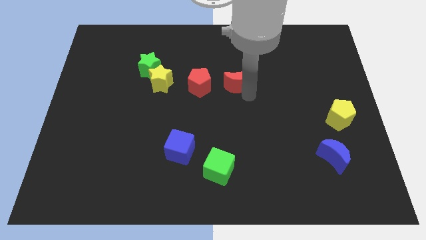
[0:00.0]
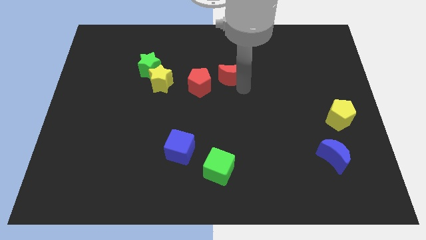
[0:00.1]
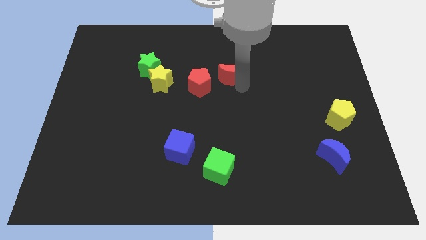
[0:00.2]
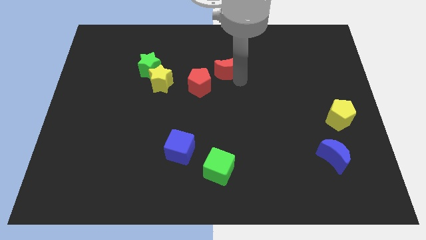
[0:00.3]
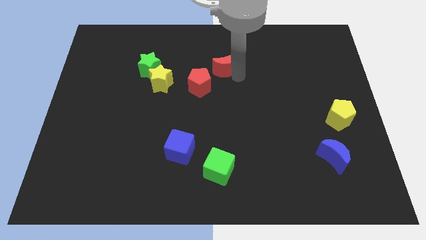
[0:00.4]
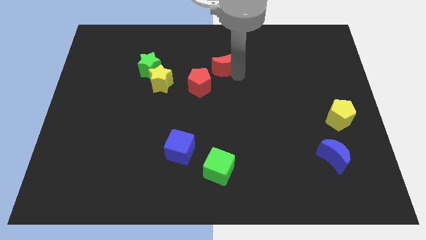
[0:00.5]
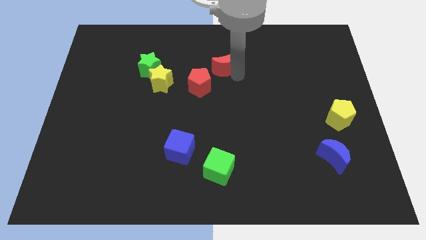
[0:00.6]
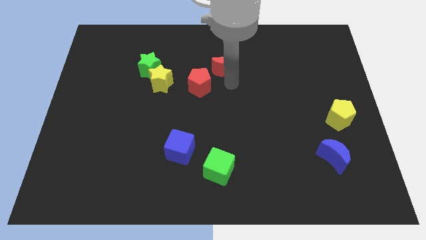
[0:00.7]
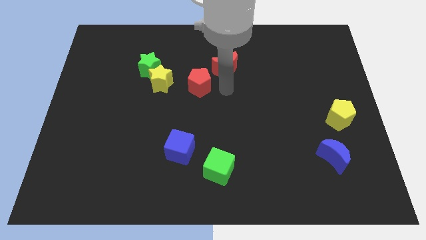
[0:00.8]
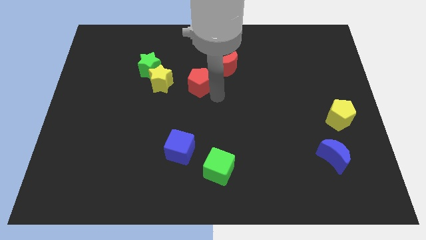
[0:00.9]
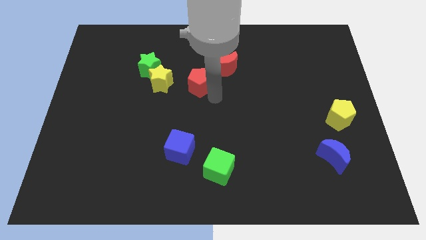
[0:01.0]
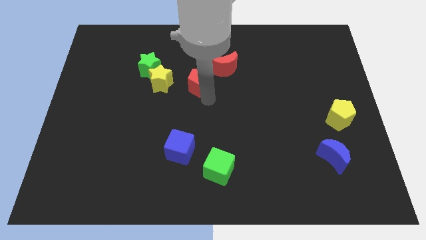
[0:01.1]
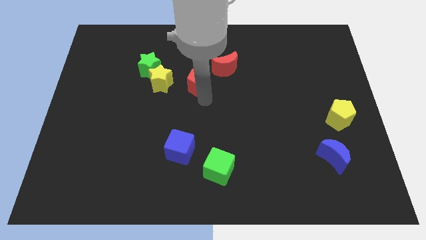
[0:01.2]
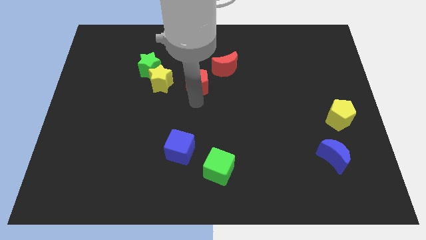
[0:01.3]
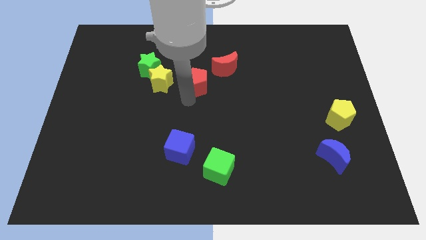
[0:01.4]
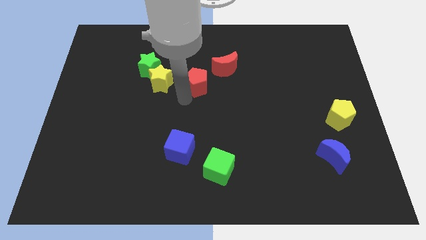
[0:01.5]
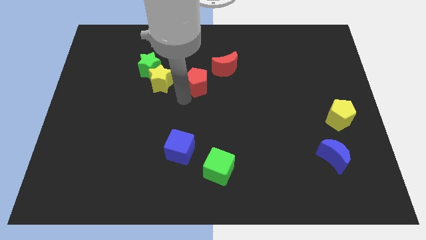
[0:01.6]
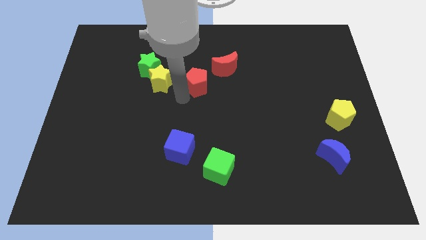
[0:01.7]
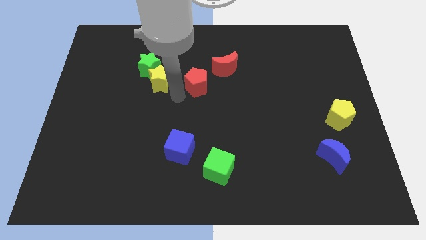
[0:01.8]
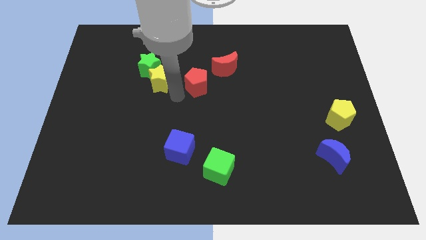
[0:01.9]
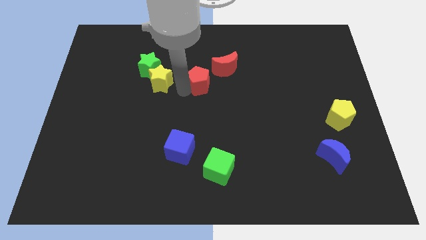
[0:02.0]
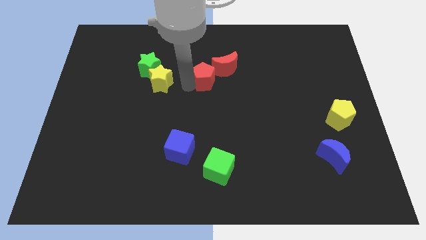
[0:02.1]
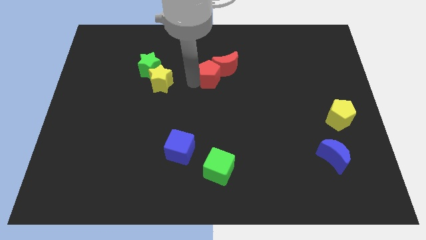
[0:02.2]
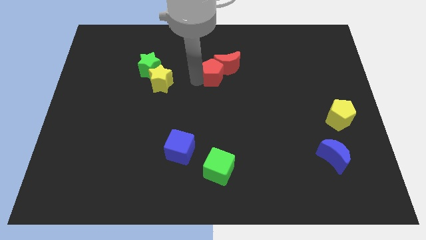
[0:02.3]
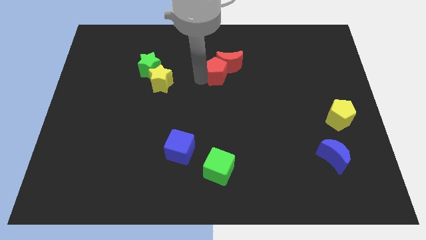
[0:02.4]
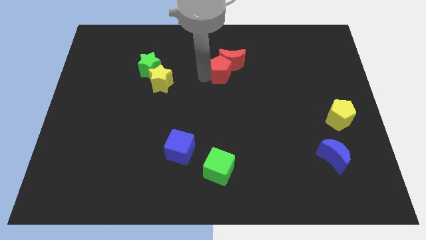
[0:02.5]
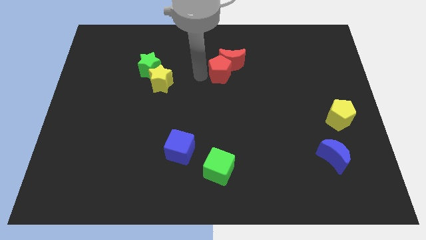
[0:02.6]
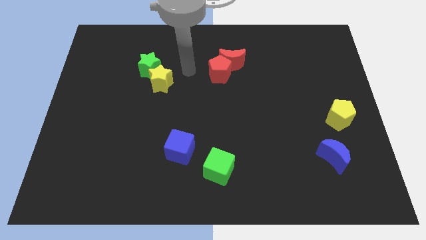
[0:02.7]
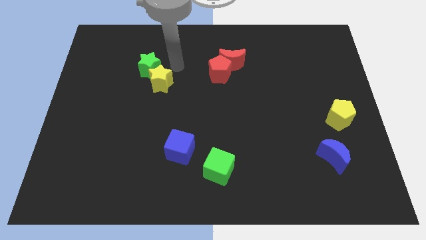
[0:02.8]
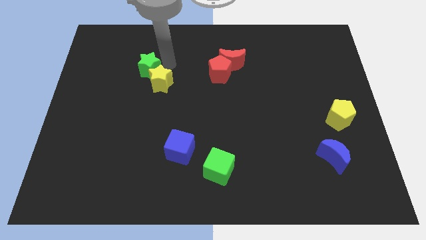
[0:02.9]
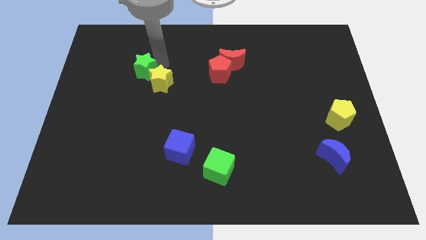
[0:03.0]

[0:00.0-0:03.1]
push the red pentagon into the red moon

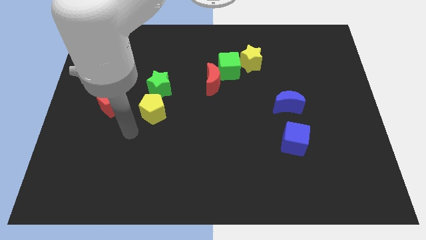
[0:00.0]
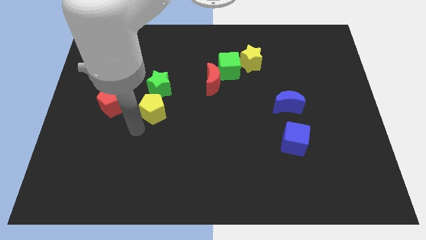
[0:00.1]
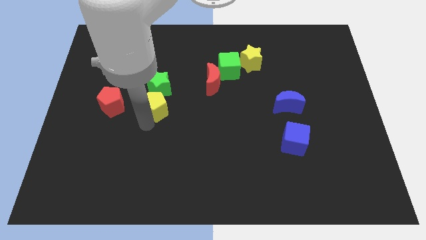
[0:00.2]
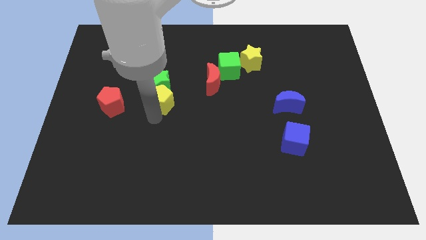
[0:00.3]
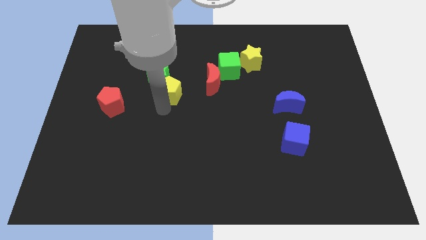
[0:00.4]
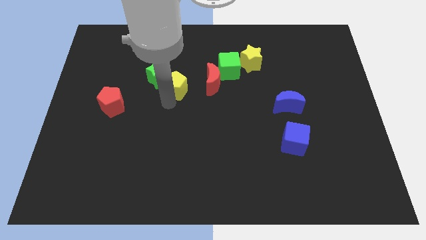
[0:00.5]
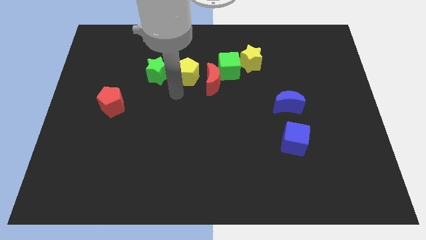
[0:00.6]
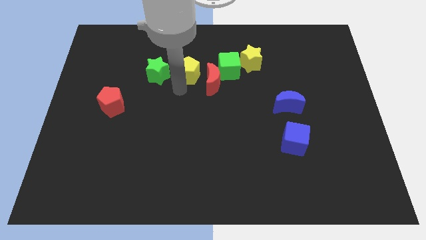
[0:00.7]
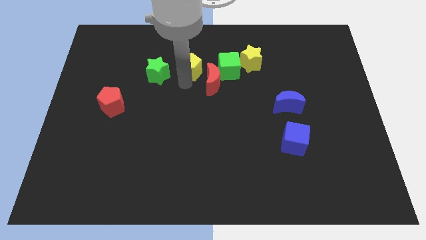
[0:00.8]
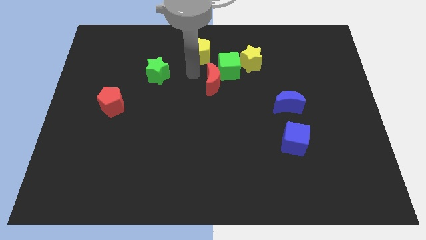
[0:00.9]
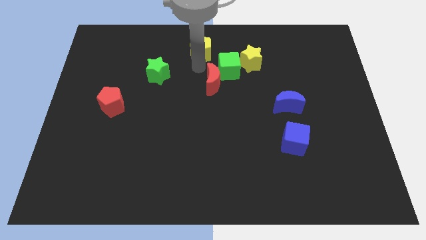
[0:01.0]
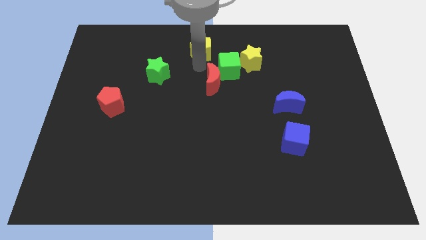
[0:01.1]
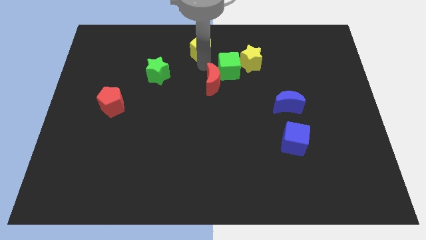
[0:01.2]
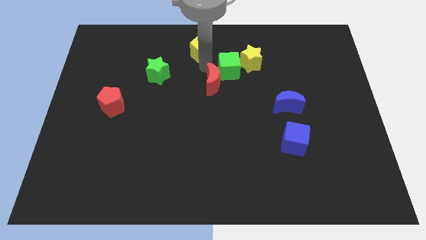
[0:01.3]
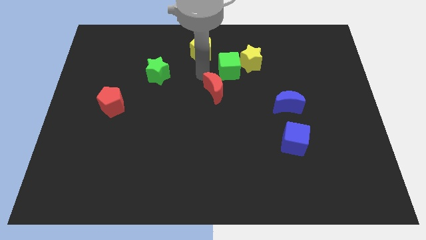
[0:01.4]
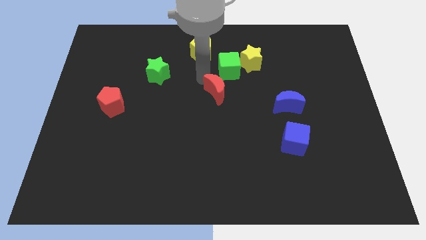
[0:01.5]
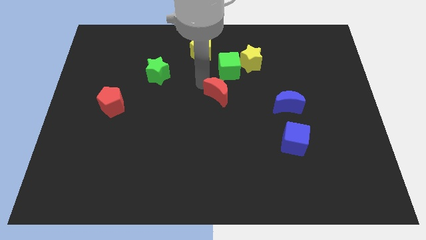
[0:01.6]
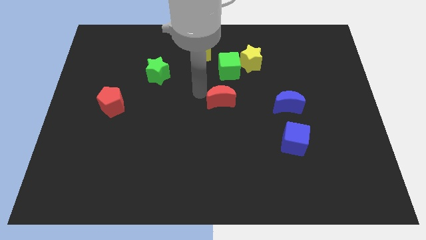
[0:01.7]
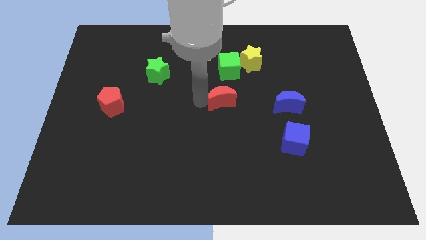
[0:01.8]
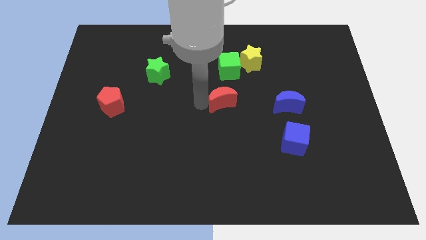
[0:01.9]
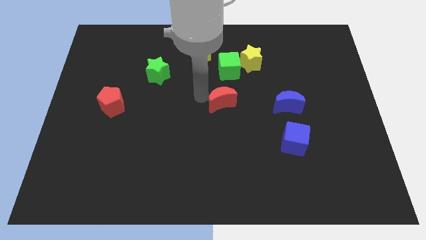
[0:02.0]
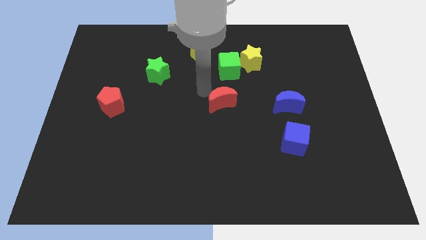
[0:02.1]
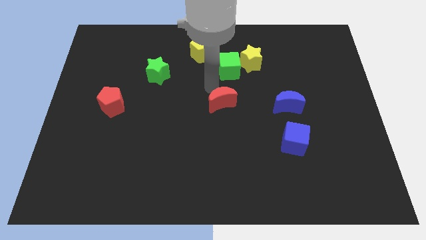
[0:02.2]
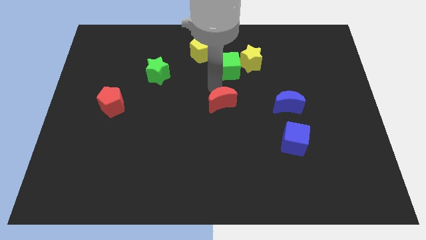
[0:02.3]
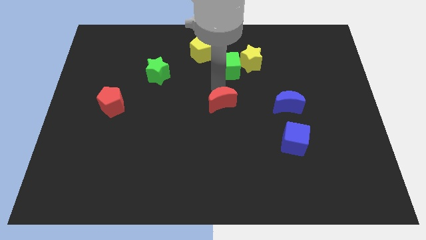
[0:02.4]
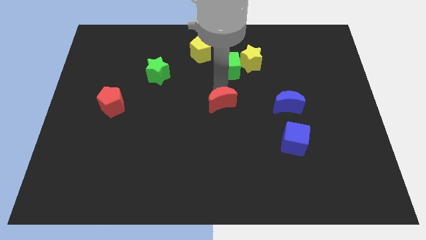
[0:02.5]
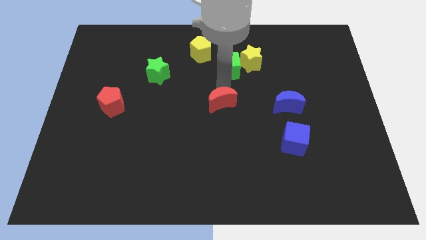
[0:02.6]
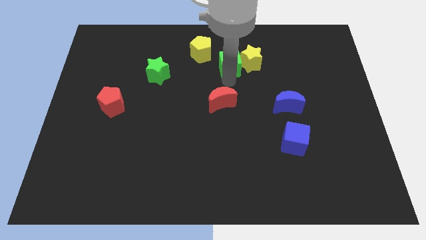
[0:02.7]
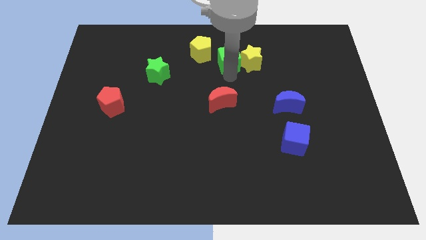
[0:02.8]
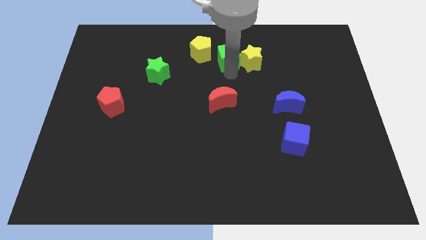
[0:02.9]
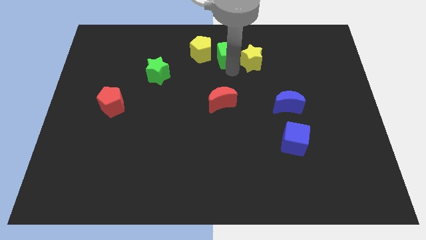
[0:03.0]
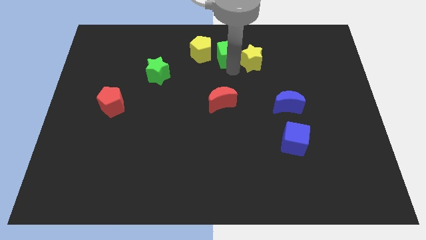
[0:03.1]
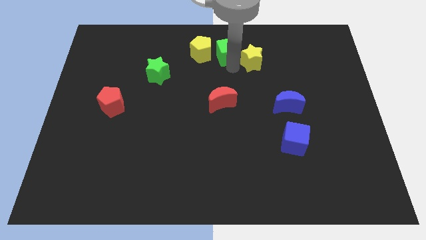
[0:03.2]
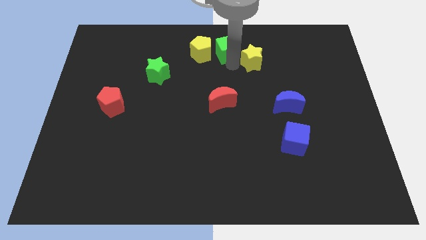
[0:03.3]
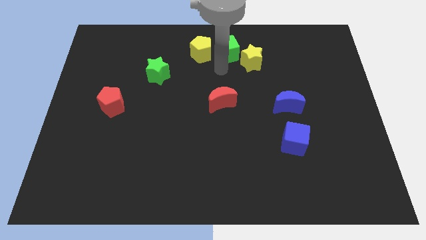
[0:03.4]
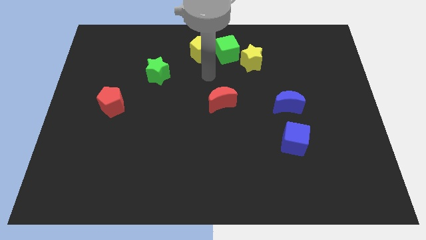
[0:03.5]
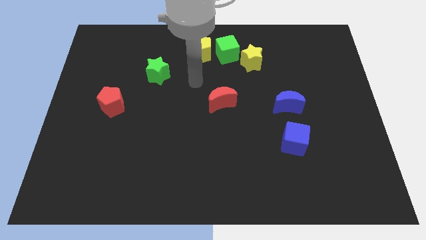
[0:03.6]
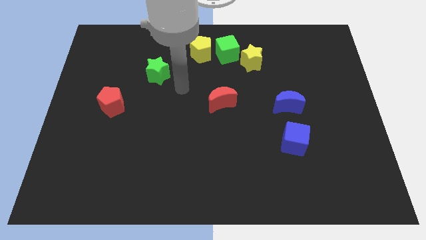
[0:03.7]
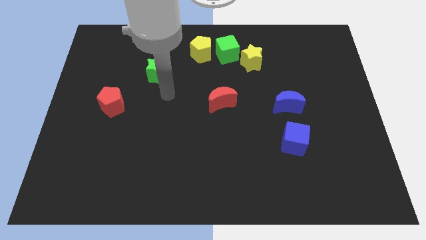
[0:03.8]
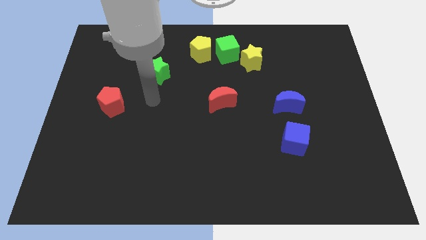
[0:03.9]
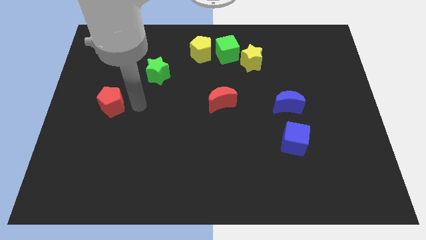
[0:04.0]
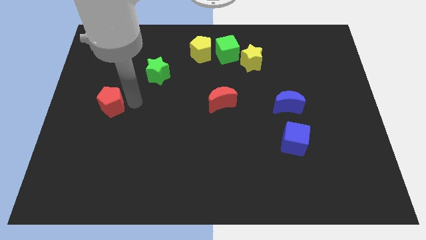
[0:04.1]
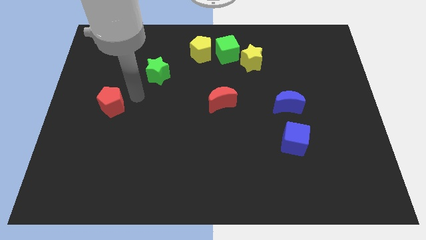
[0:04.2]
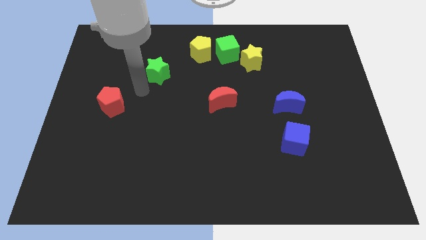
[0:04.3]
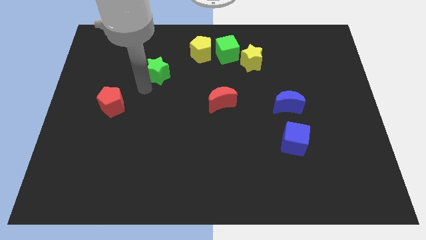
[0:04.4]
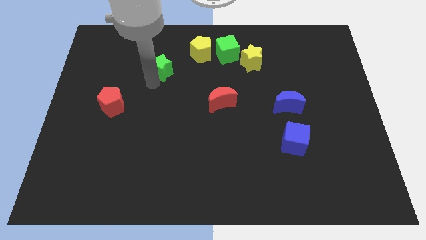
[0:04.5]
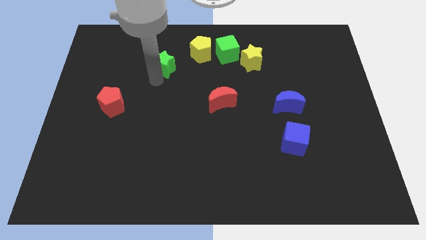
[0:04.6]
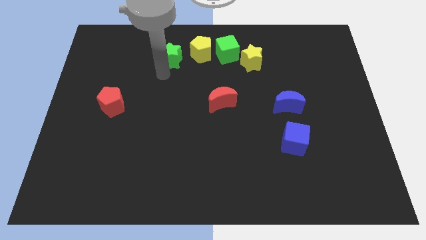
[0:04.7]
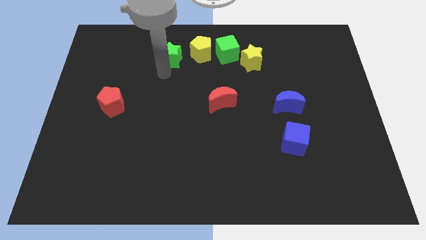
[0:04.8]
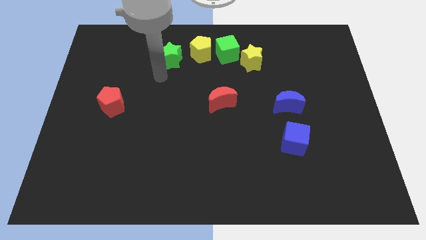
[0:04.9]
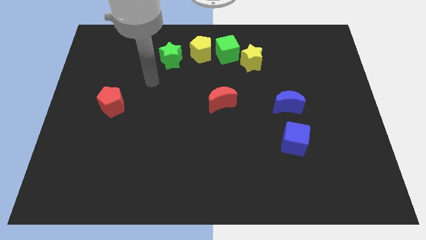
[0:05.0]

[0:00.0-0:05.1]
push a group of blocks towards the top of the board

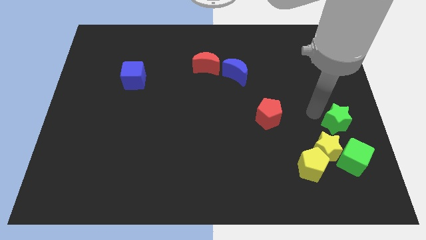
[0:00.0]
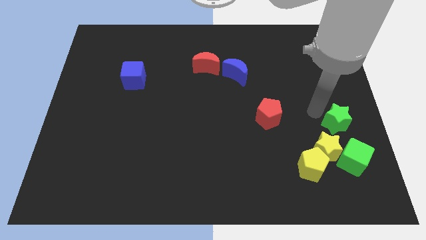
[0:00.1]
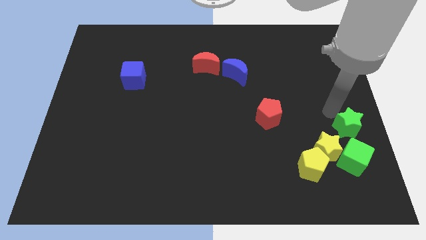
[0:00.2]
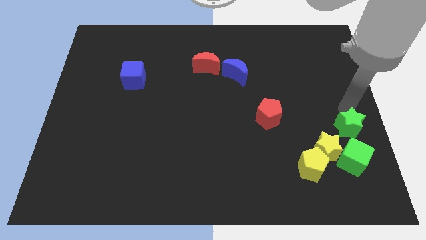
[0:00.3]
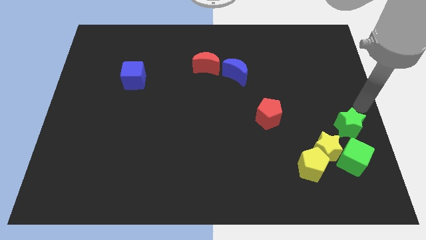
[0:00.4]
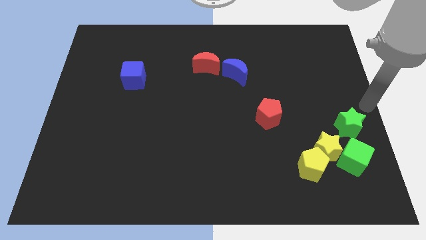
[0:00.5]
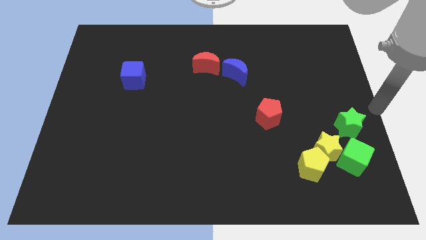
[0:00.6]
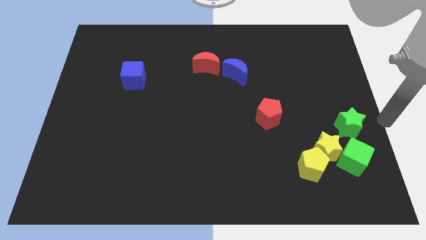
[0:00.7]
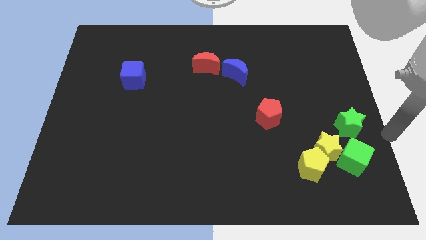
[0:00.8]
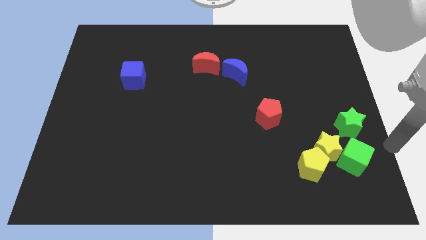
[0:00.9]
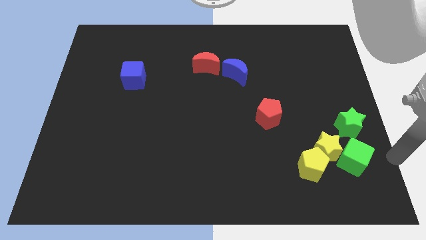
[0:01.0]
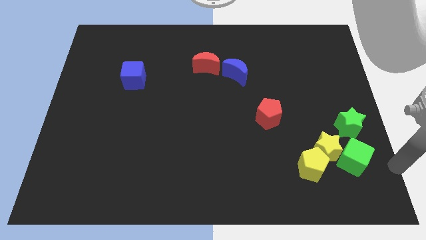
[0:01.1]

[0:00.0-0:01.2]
tap at the top side of the green star
